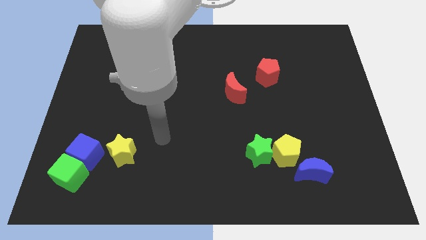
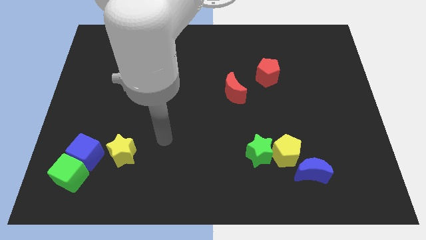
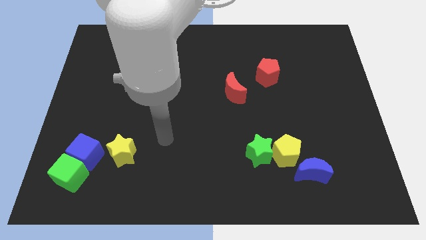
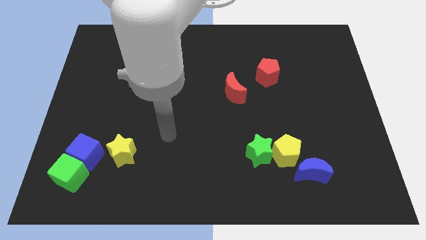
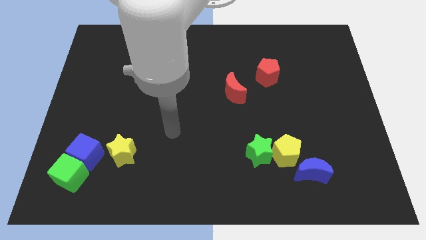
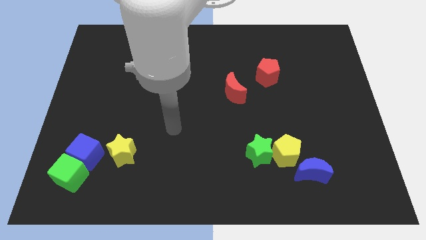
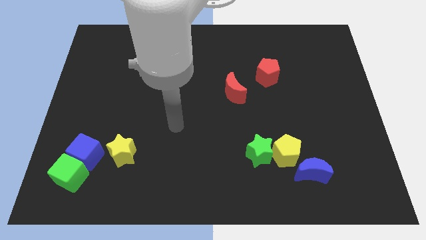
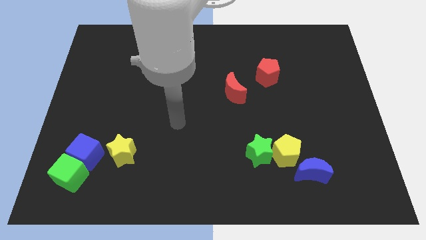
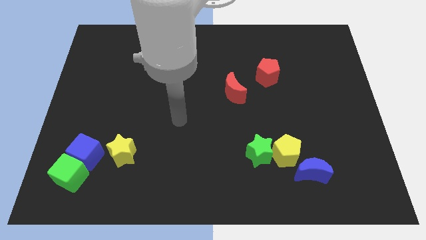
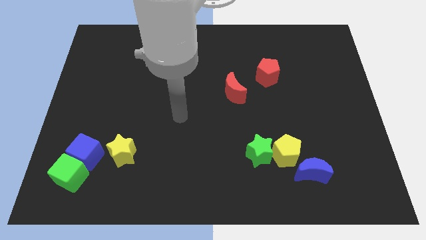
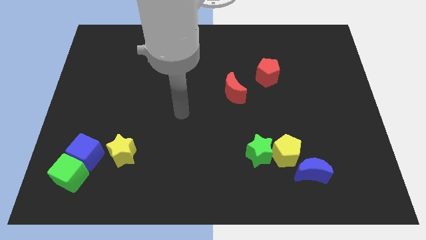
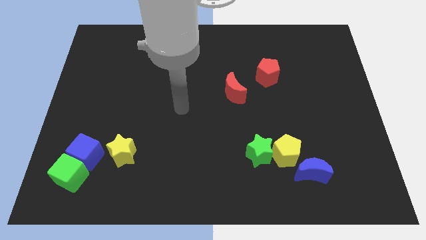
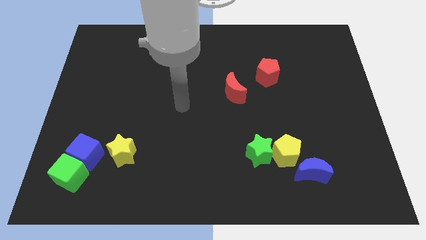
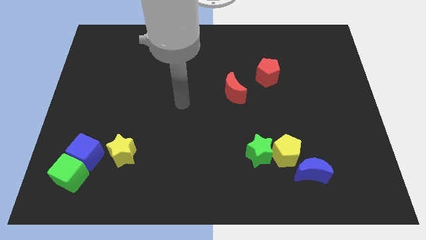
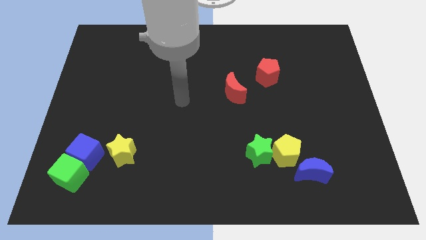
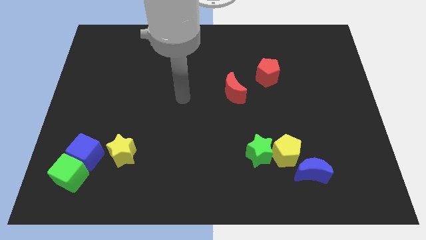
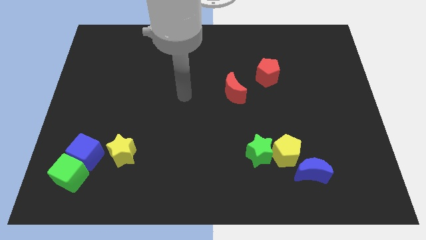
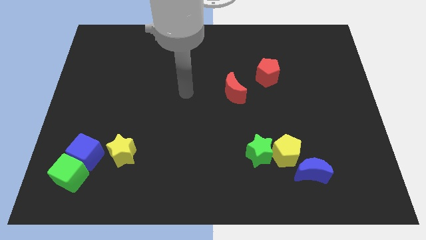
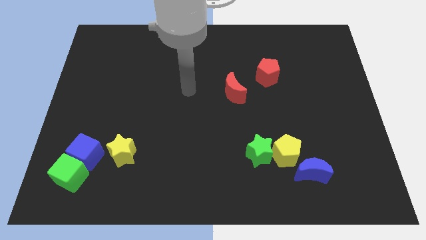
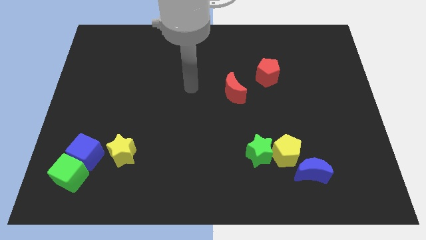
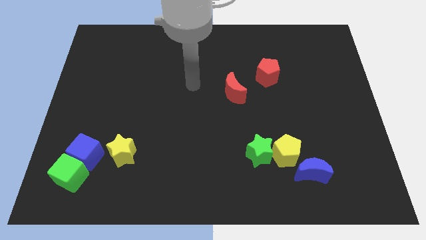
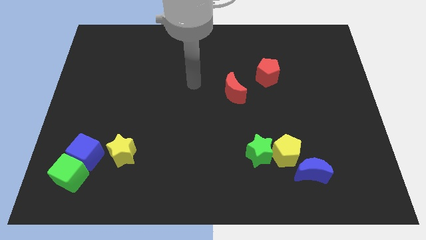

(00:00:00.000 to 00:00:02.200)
move yourself away from the yellow star

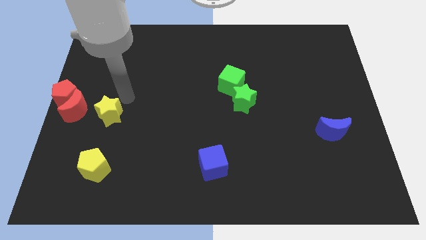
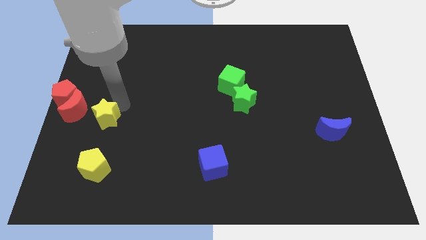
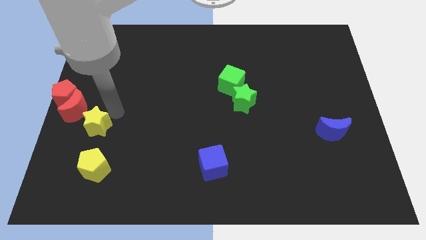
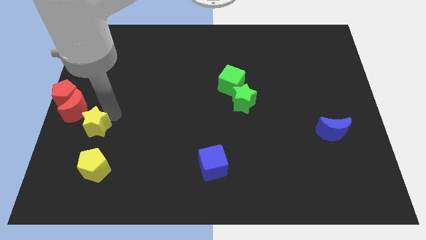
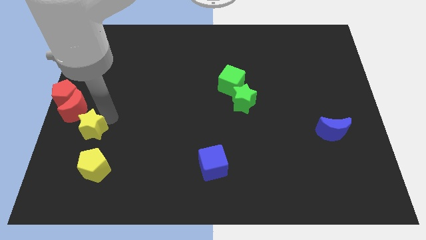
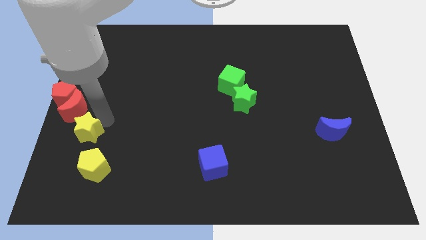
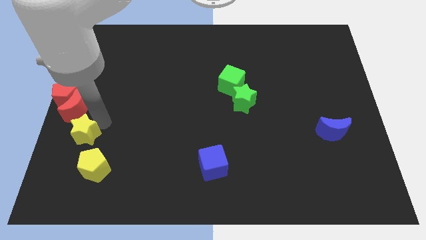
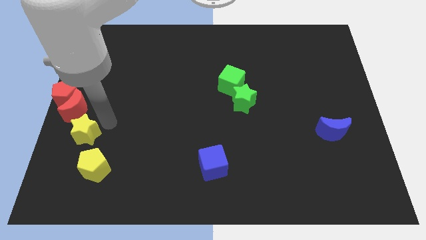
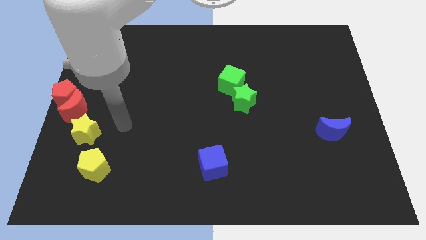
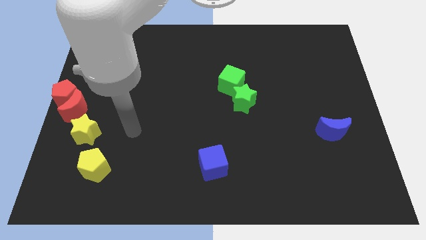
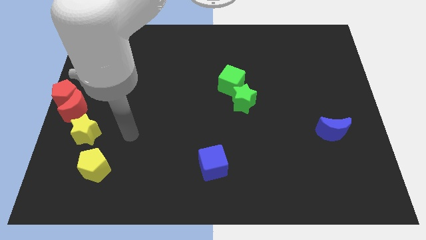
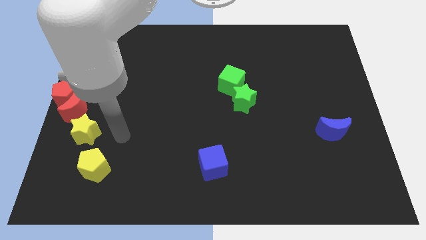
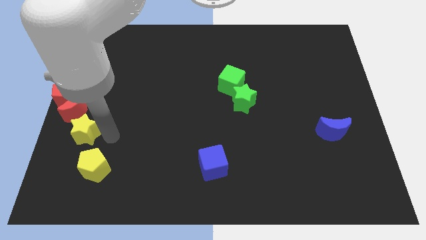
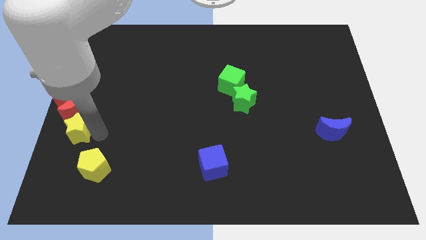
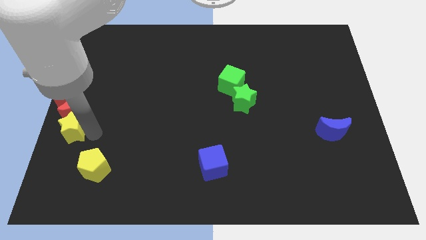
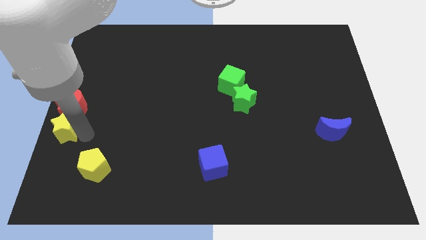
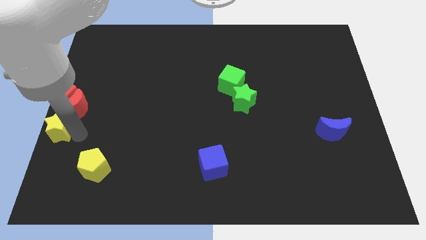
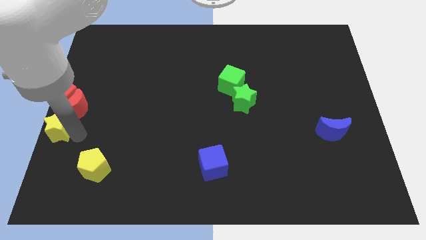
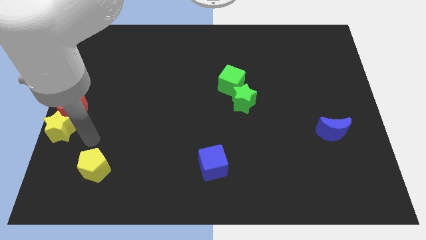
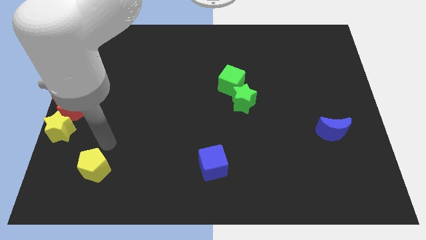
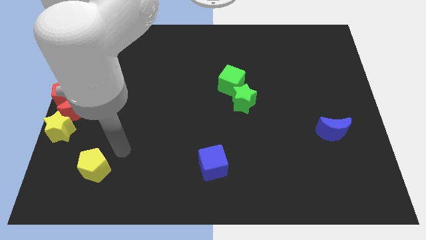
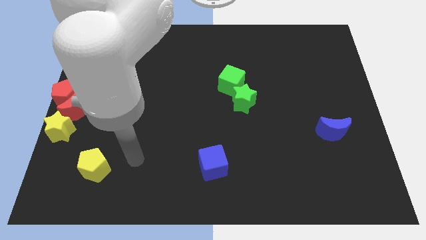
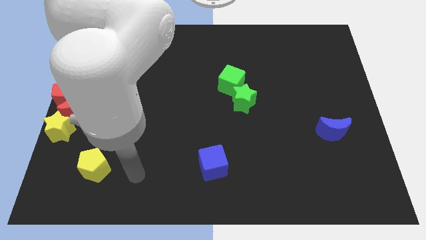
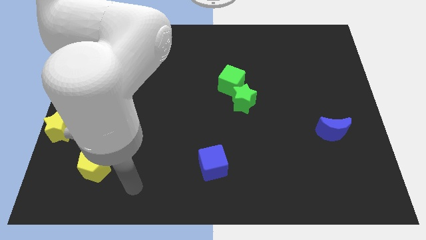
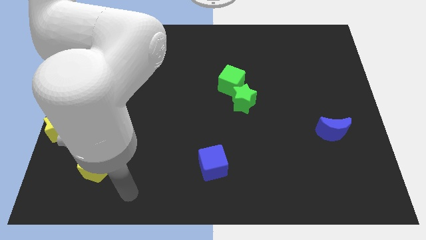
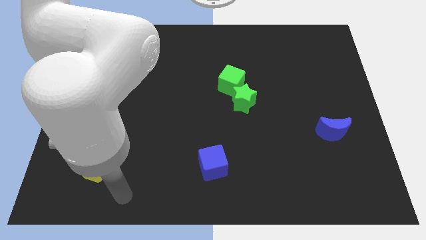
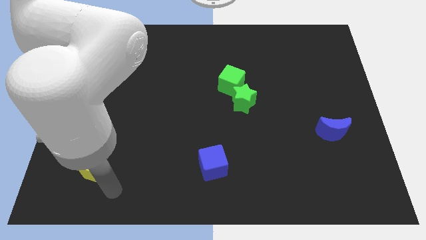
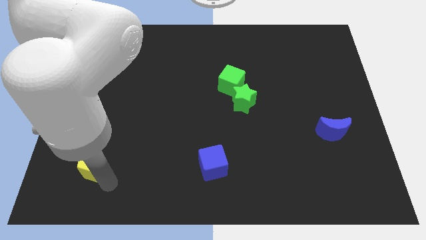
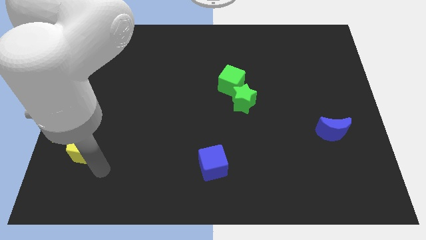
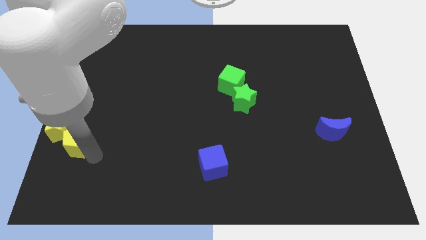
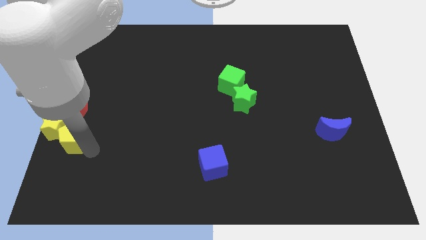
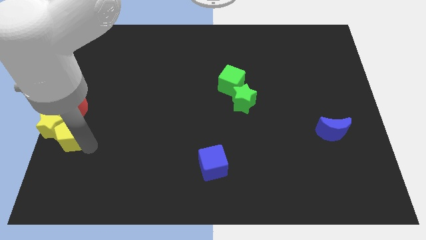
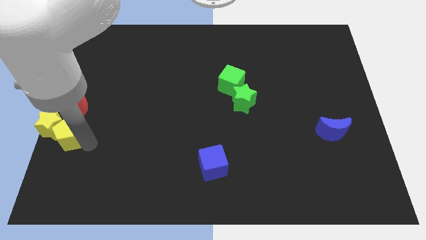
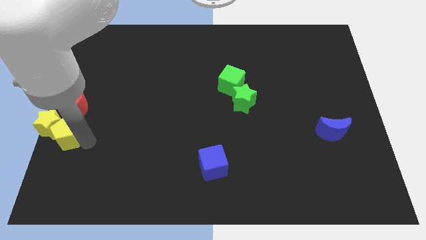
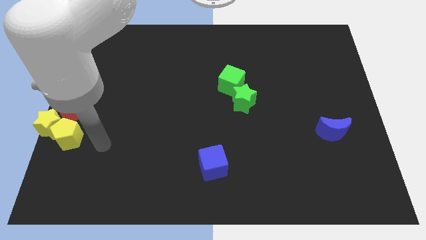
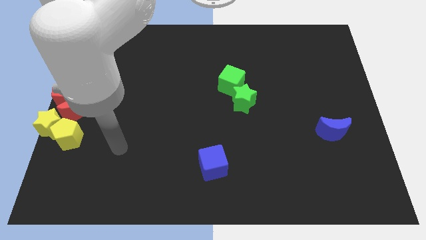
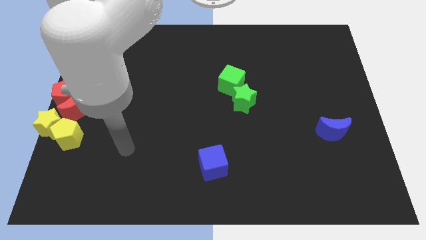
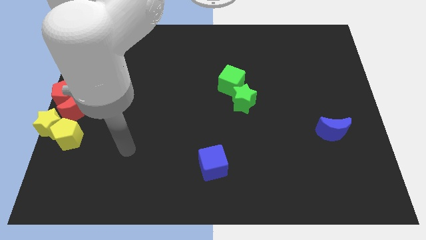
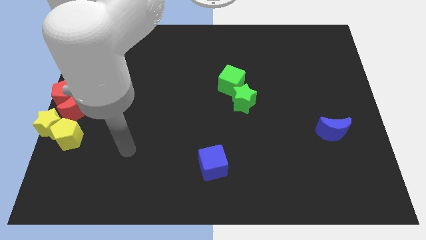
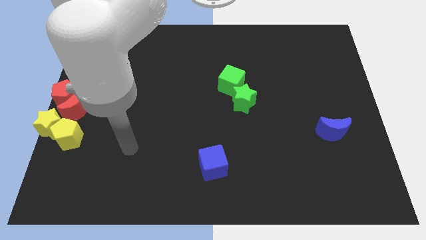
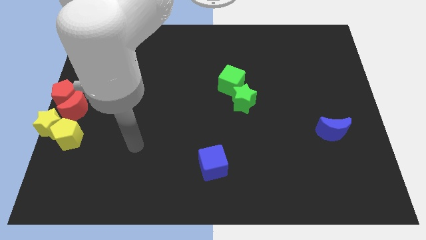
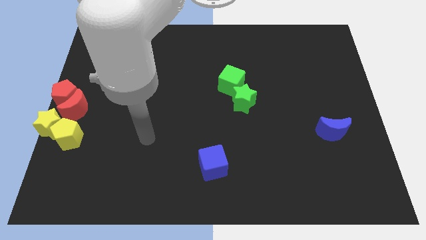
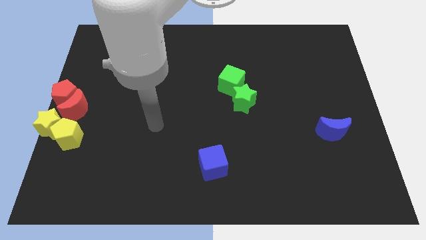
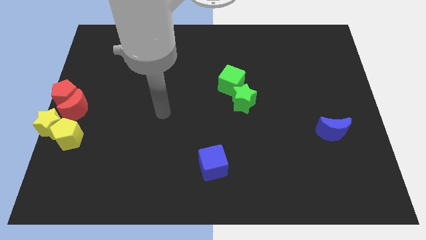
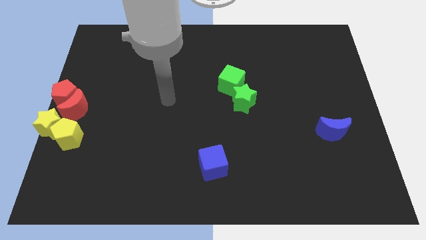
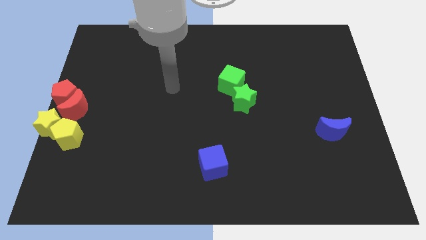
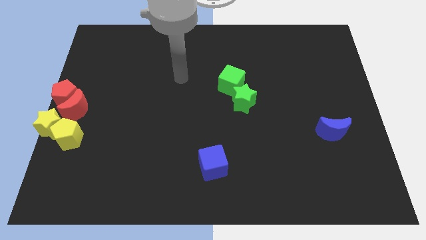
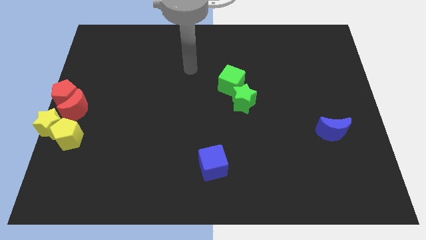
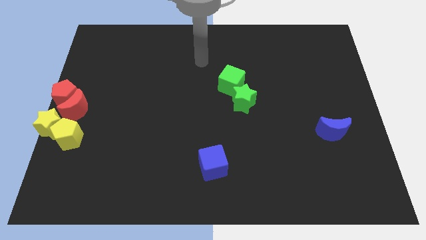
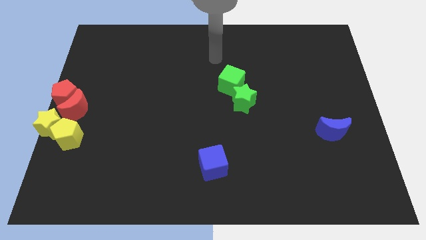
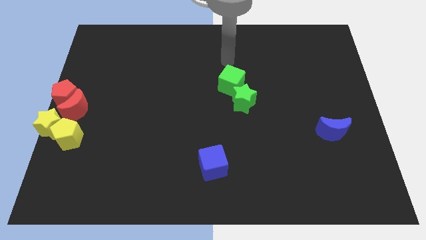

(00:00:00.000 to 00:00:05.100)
push the yellow pentagon into the yellow star

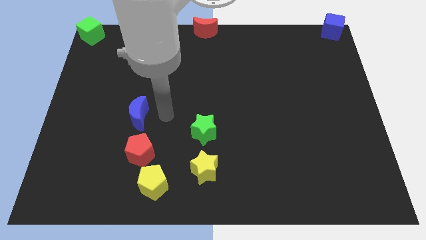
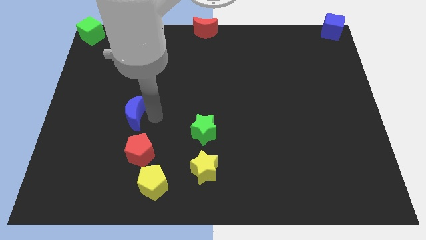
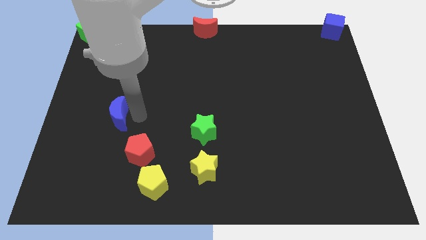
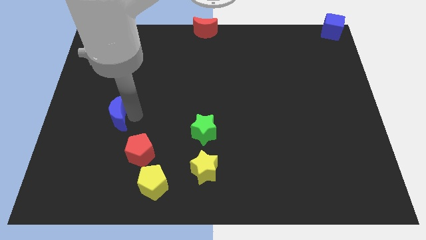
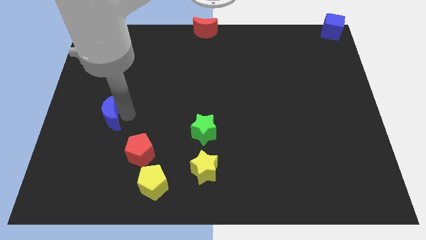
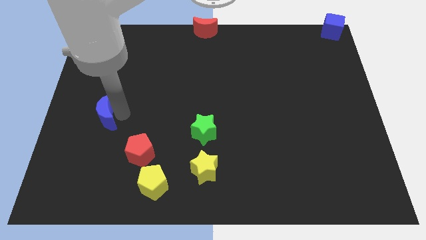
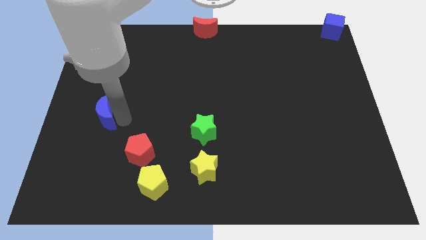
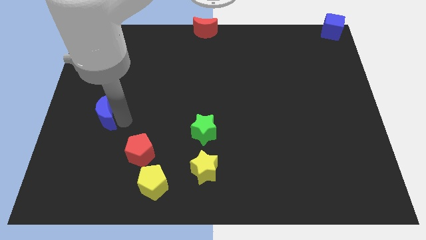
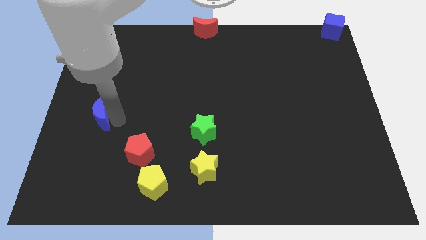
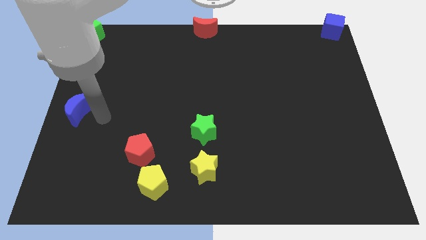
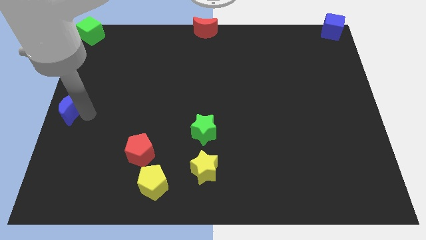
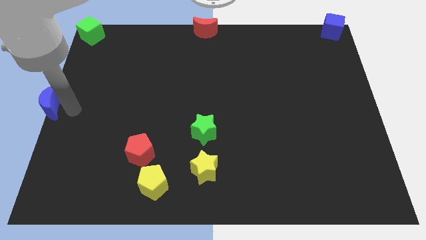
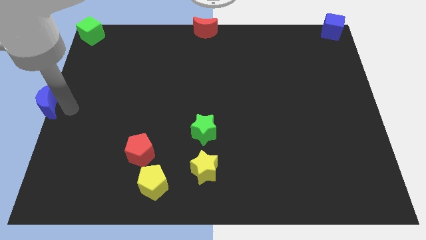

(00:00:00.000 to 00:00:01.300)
slide the blue moon to the center left

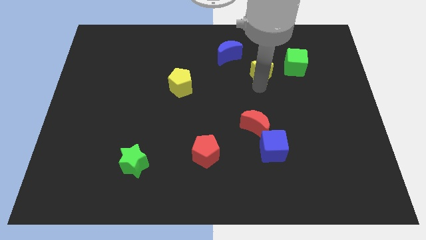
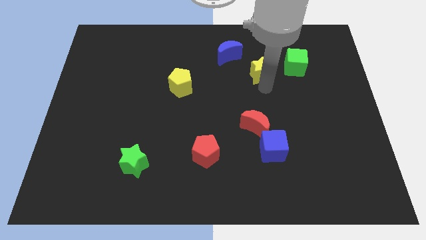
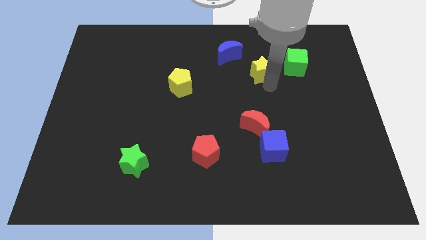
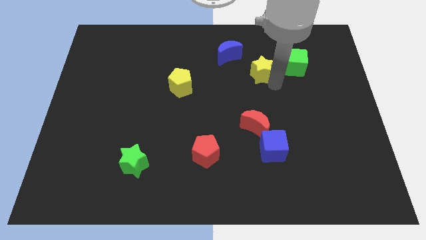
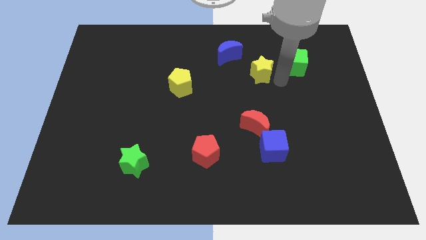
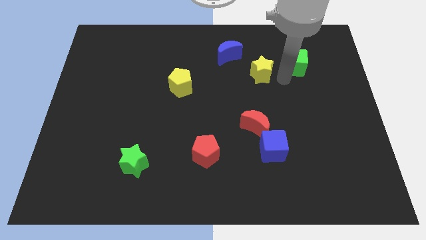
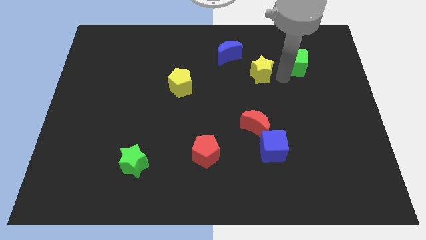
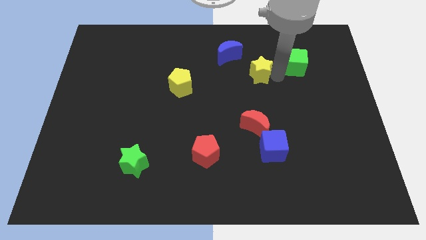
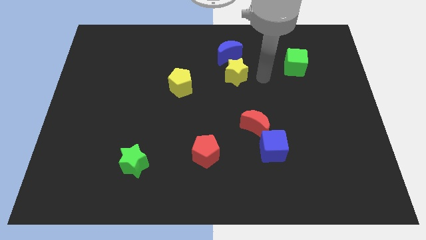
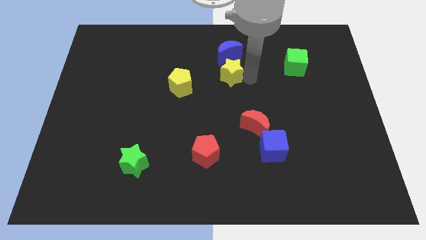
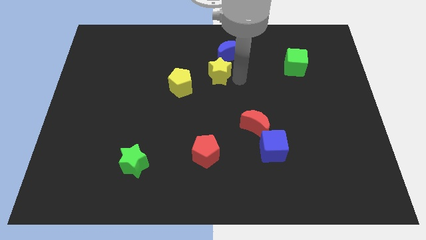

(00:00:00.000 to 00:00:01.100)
move the yellow star to the center
